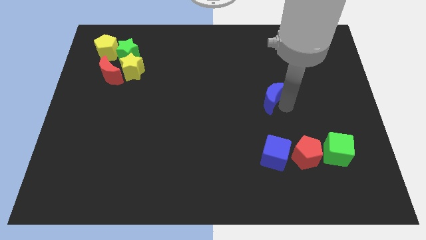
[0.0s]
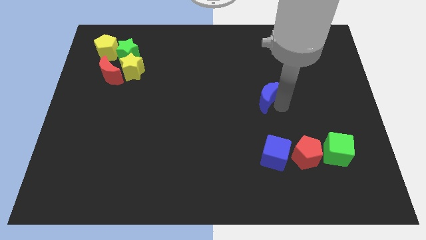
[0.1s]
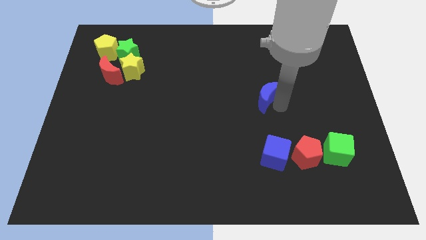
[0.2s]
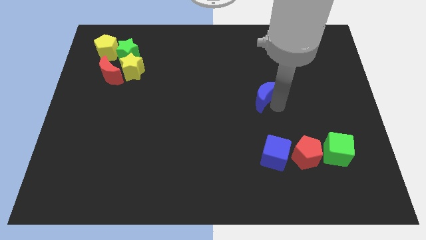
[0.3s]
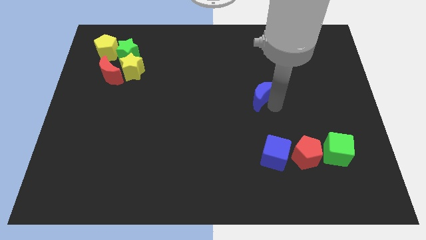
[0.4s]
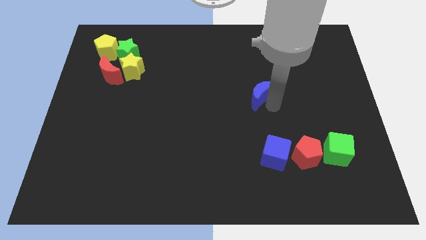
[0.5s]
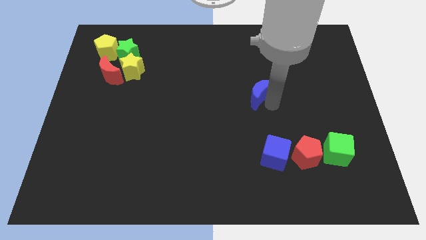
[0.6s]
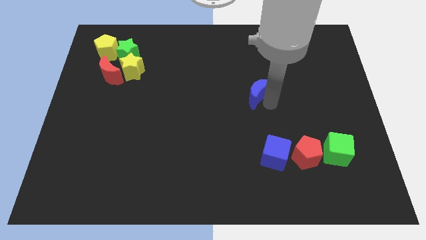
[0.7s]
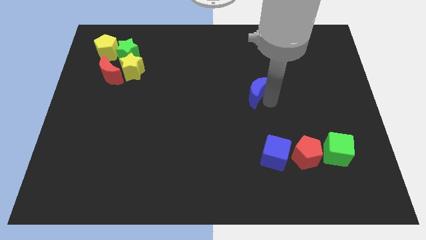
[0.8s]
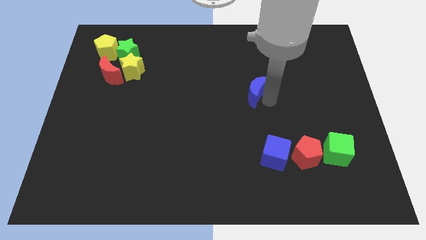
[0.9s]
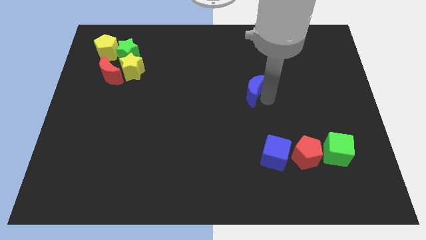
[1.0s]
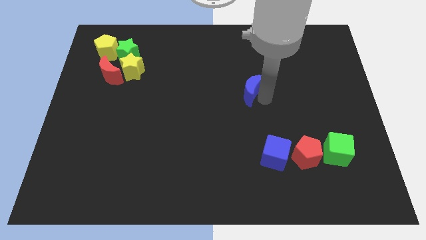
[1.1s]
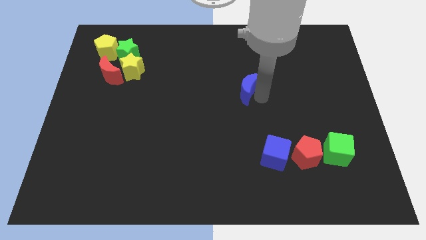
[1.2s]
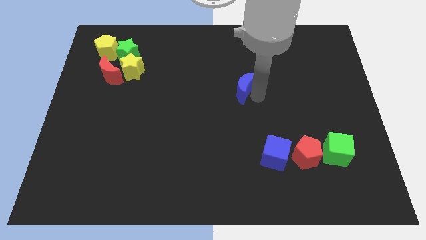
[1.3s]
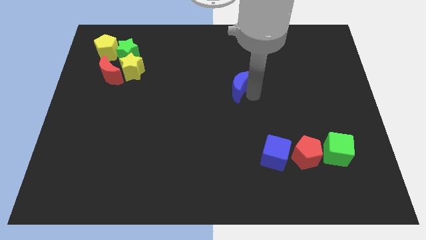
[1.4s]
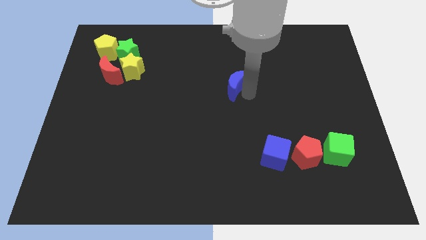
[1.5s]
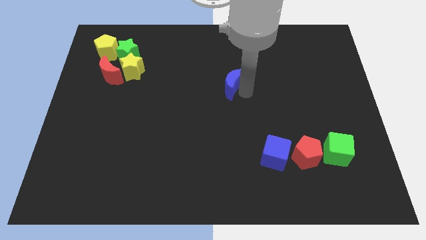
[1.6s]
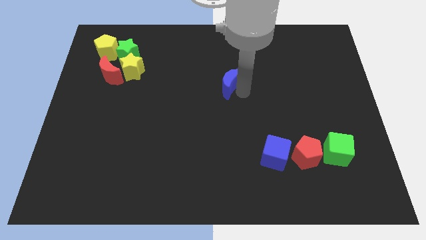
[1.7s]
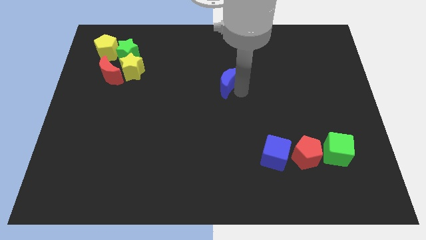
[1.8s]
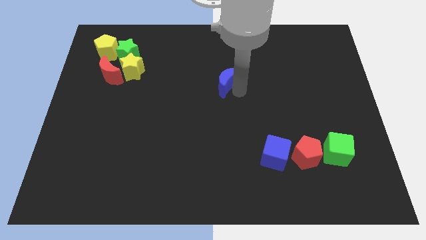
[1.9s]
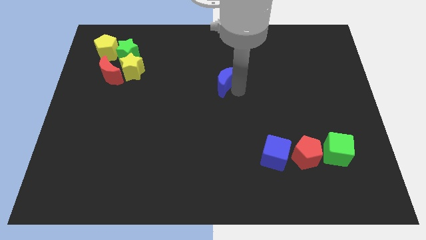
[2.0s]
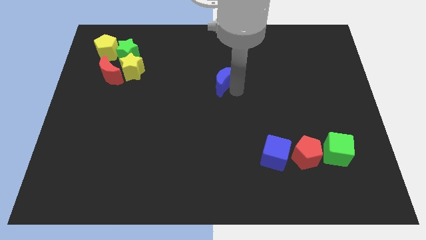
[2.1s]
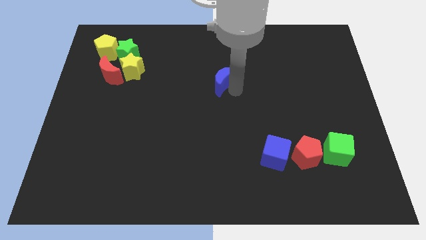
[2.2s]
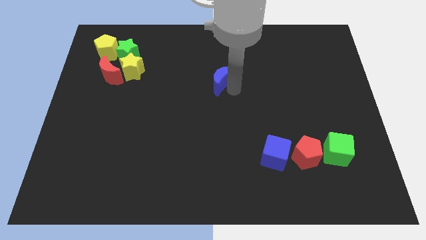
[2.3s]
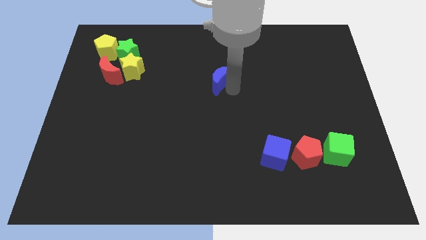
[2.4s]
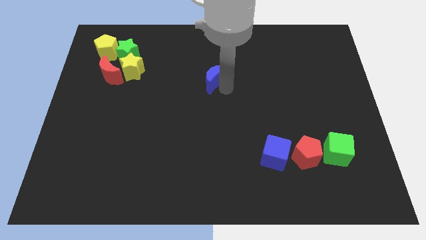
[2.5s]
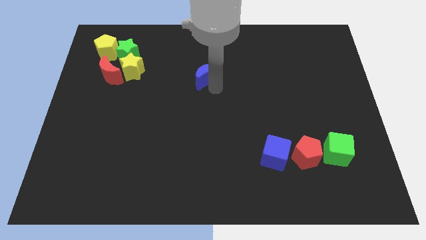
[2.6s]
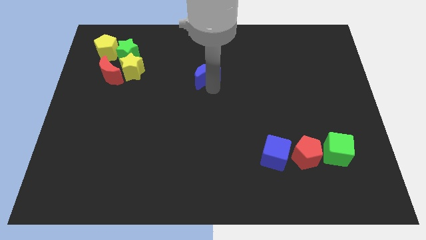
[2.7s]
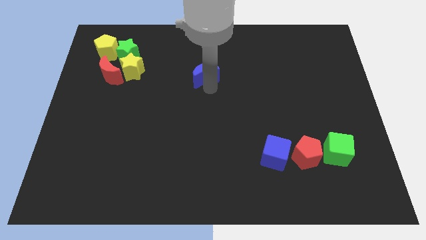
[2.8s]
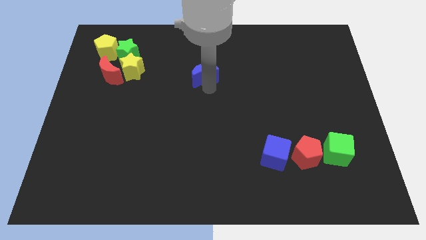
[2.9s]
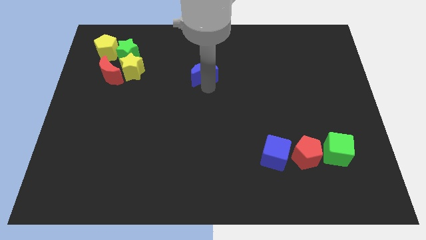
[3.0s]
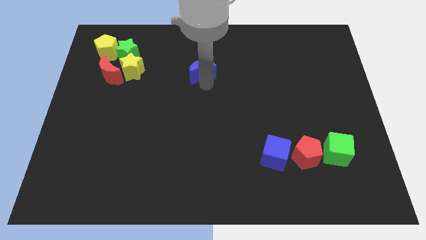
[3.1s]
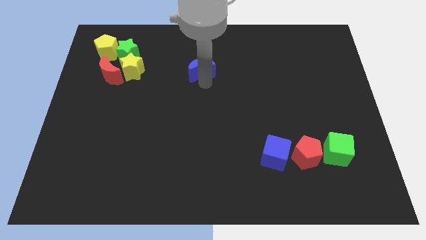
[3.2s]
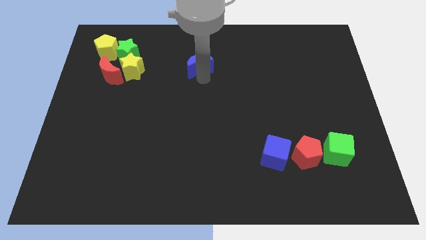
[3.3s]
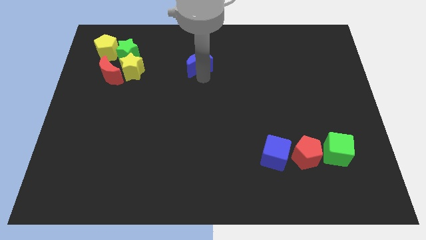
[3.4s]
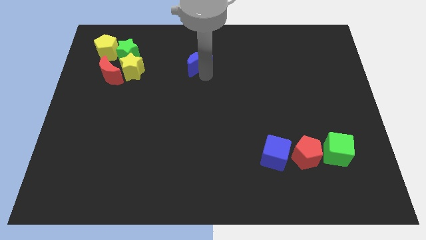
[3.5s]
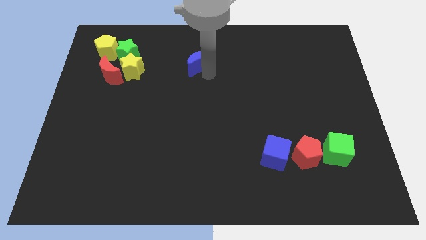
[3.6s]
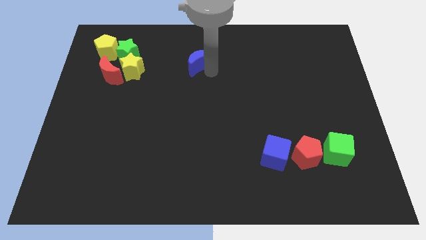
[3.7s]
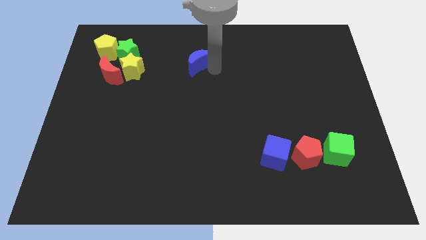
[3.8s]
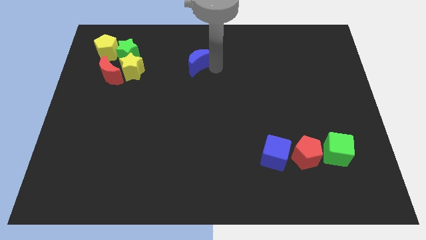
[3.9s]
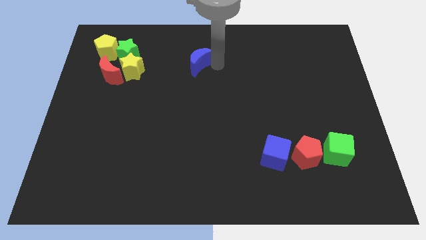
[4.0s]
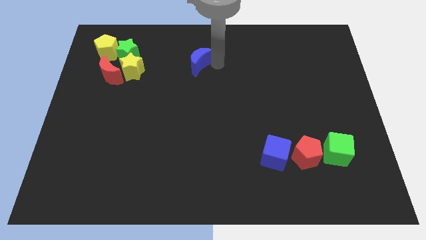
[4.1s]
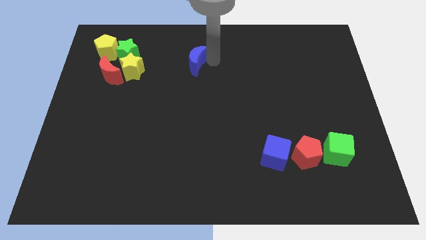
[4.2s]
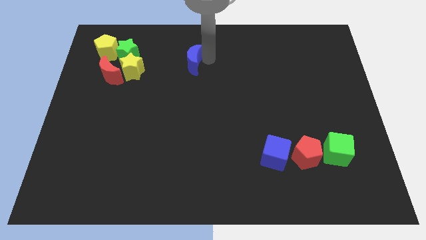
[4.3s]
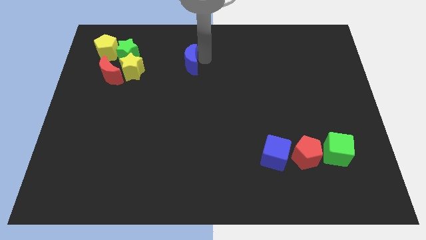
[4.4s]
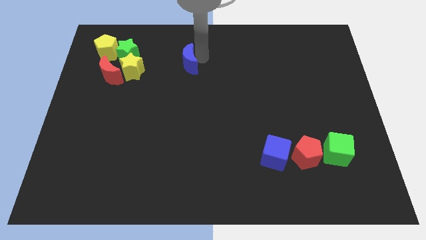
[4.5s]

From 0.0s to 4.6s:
push the blue moon upward

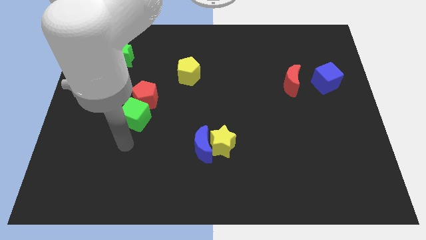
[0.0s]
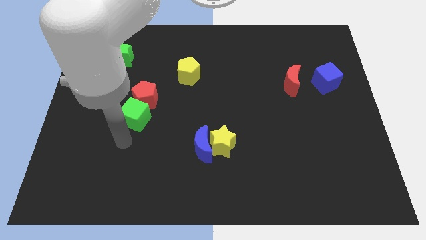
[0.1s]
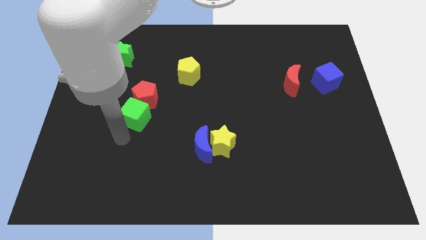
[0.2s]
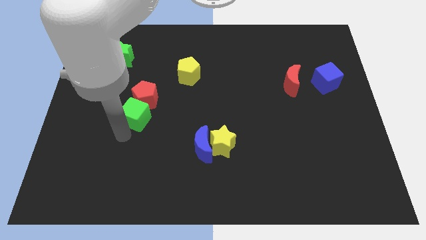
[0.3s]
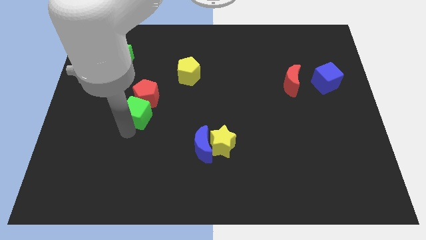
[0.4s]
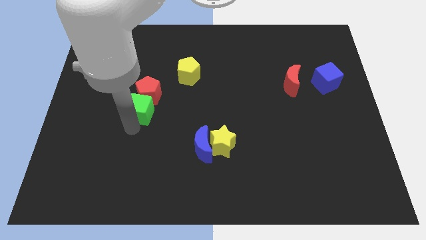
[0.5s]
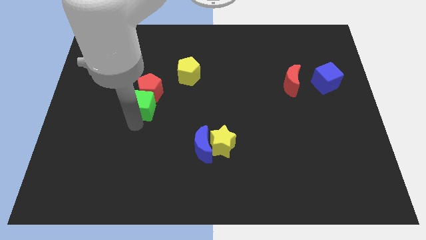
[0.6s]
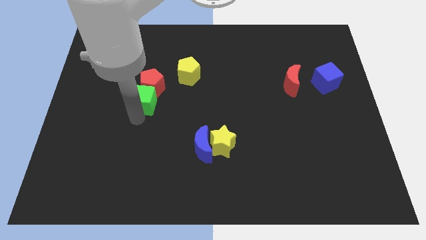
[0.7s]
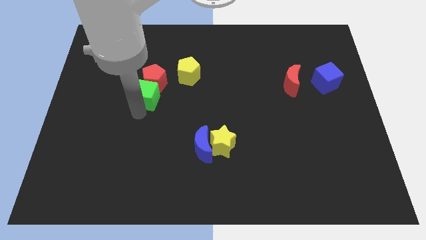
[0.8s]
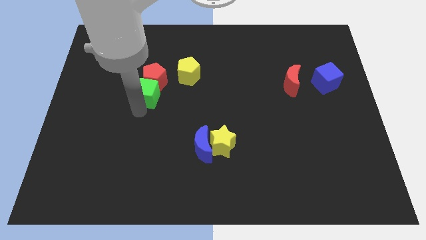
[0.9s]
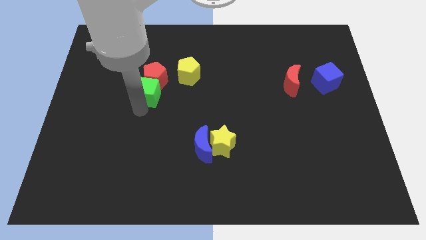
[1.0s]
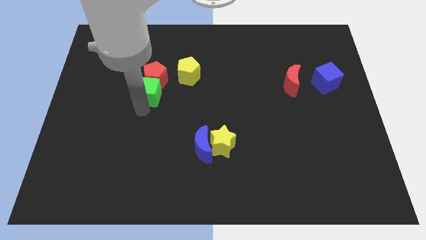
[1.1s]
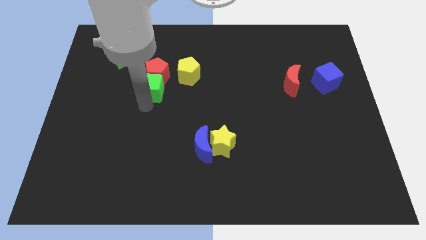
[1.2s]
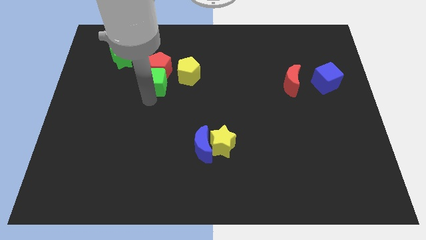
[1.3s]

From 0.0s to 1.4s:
move the red pentagon and green cube towards the top side of the board

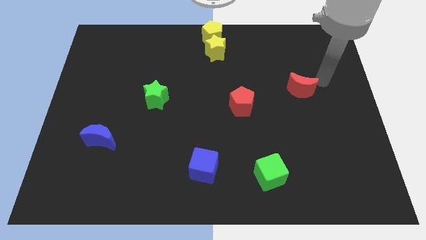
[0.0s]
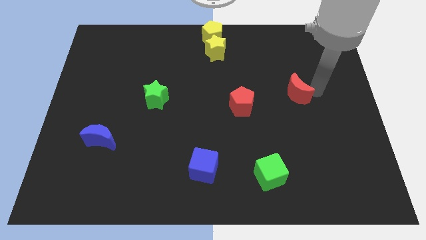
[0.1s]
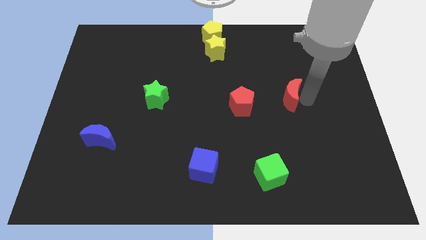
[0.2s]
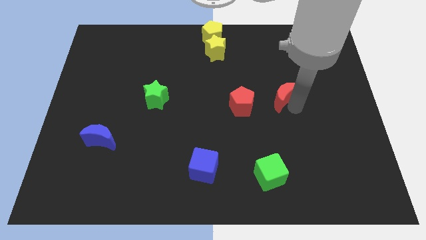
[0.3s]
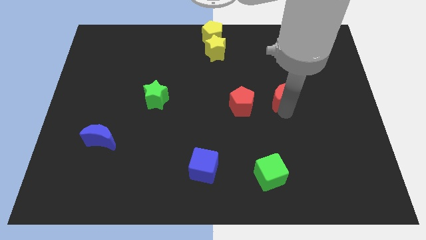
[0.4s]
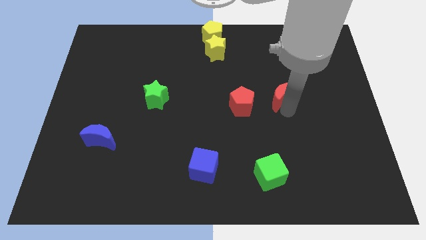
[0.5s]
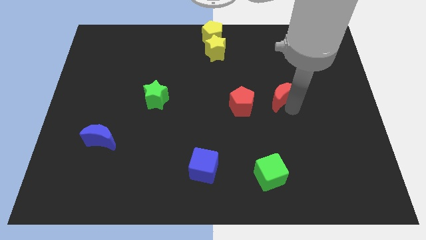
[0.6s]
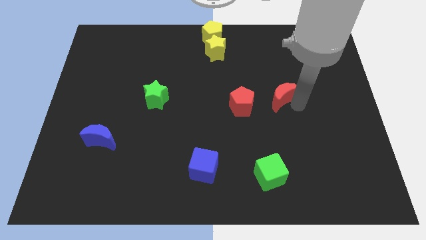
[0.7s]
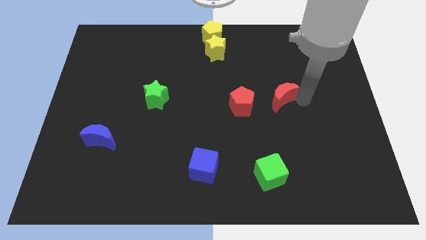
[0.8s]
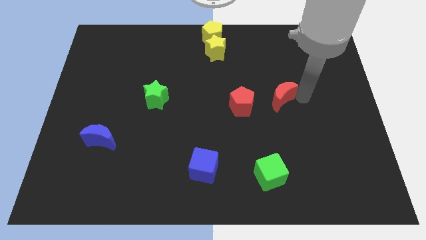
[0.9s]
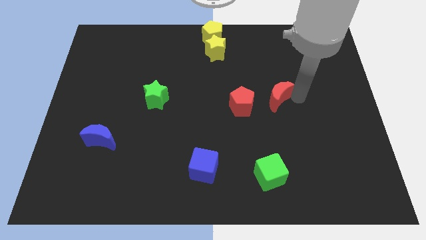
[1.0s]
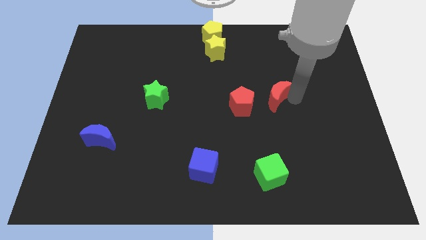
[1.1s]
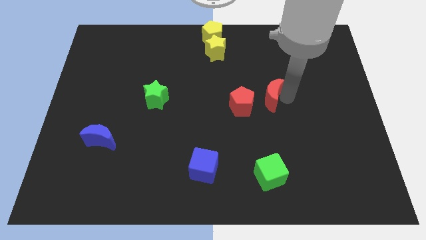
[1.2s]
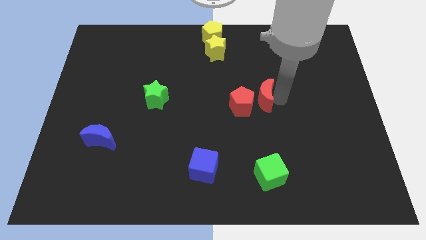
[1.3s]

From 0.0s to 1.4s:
place the red moon to the right of the red pentagon

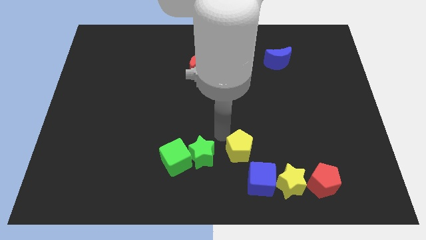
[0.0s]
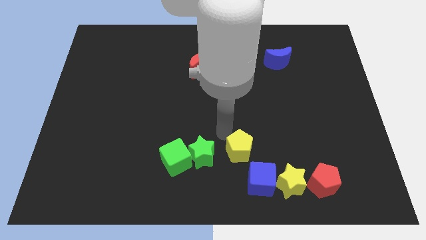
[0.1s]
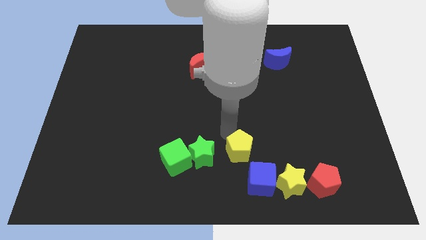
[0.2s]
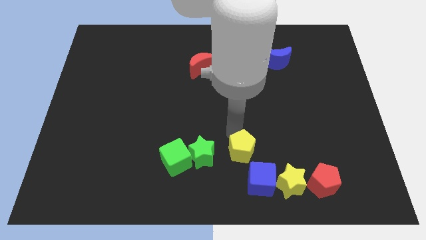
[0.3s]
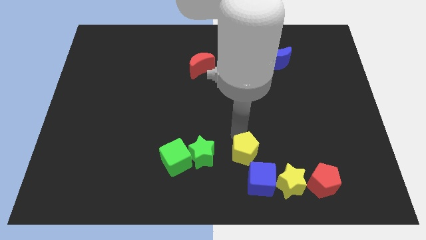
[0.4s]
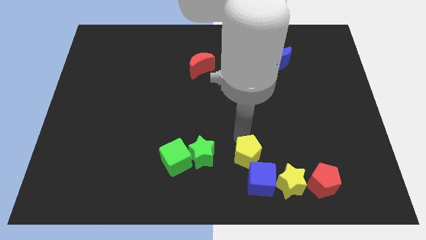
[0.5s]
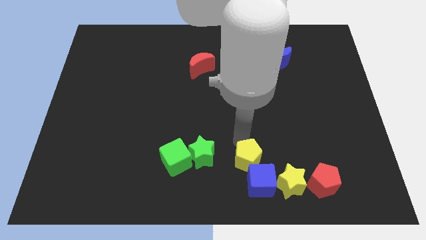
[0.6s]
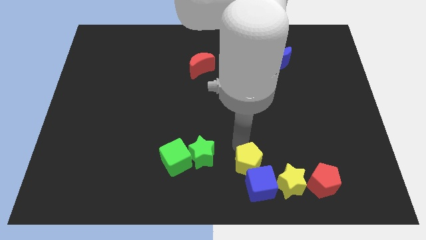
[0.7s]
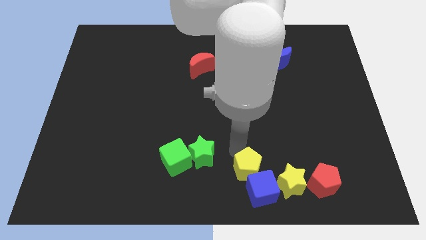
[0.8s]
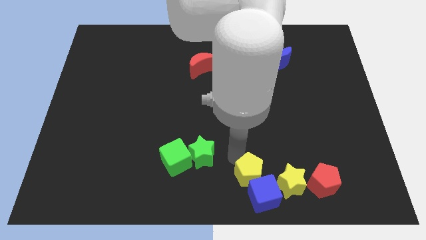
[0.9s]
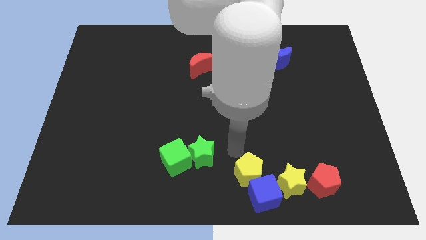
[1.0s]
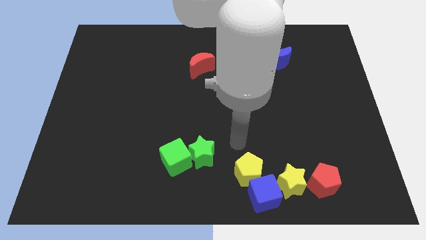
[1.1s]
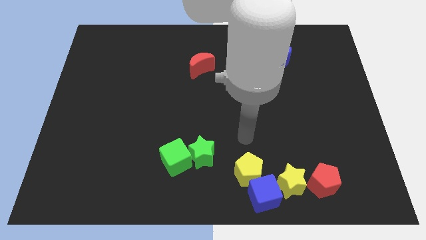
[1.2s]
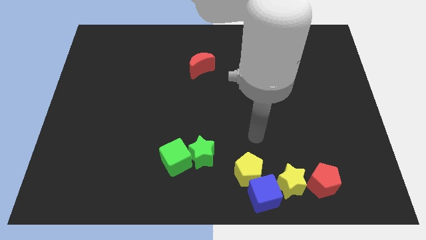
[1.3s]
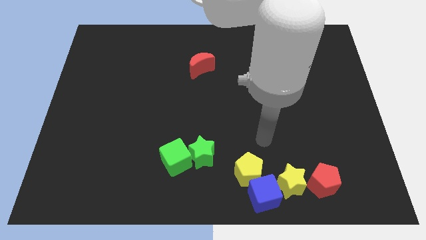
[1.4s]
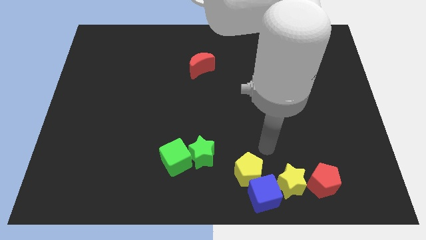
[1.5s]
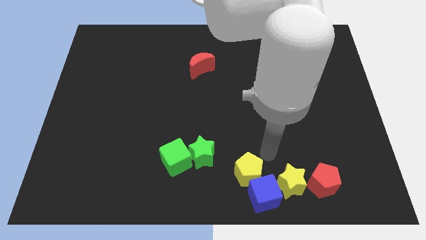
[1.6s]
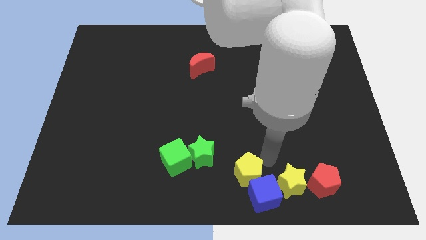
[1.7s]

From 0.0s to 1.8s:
put the yellow pentagon into the blue cube
